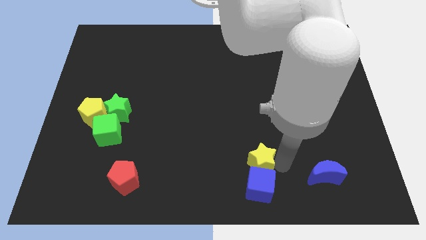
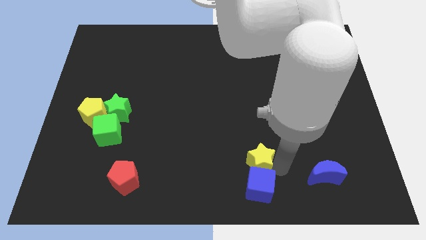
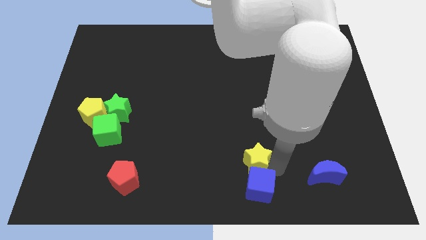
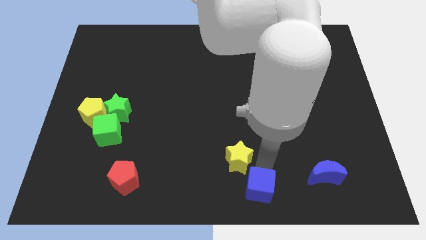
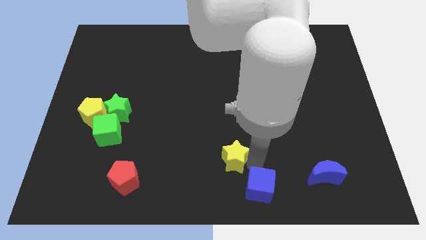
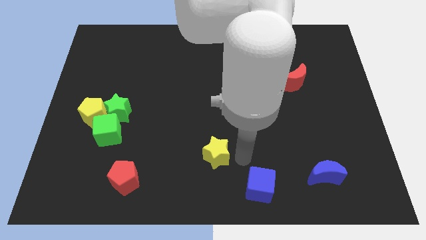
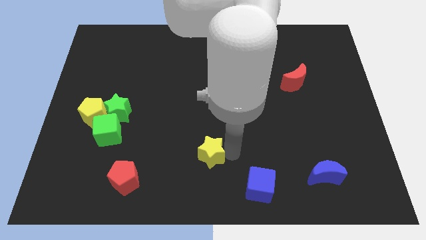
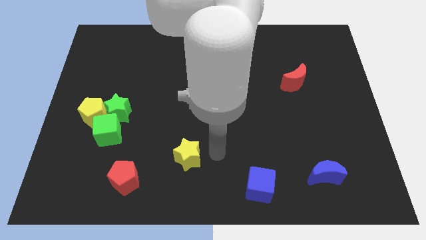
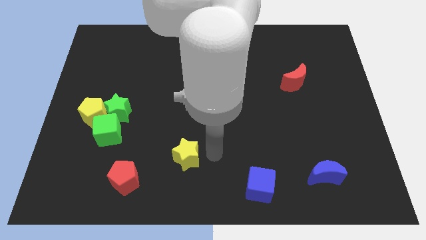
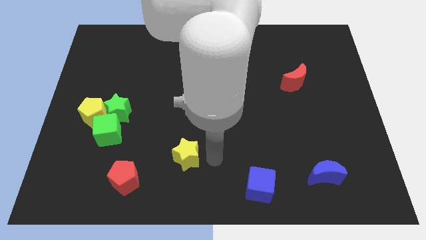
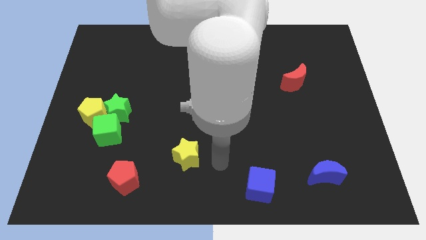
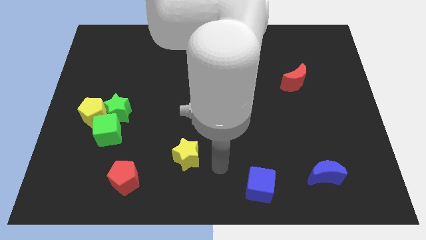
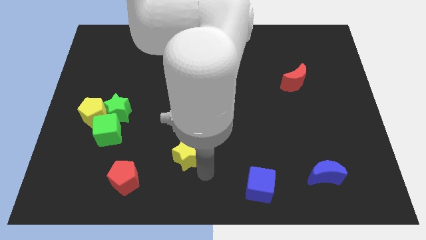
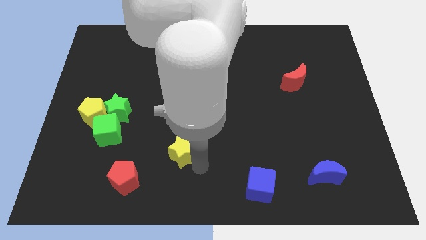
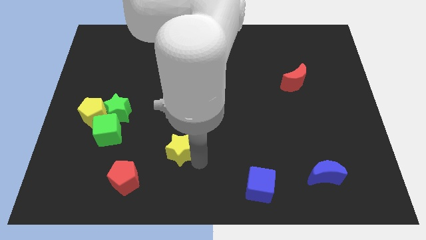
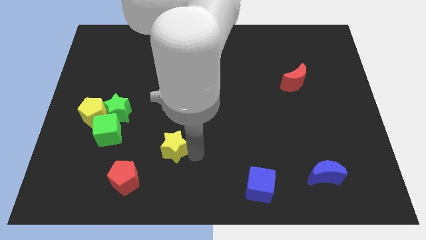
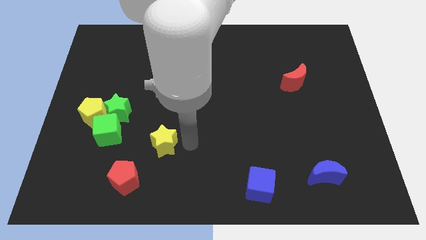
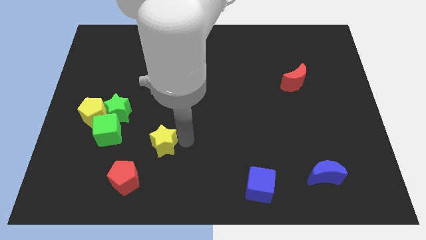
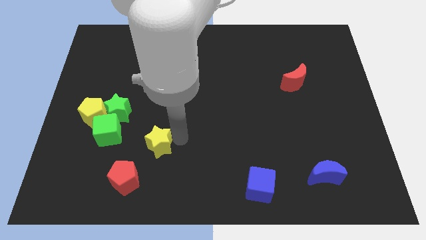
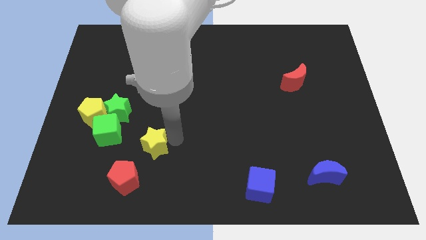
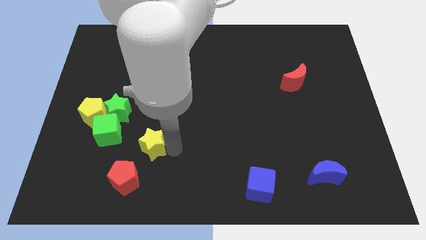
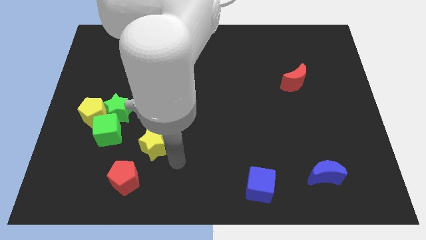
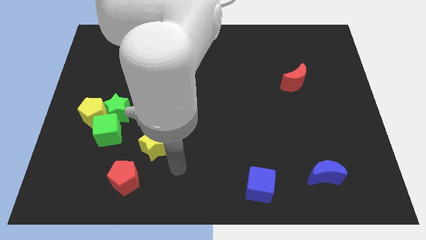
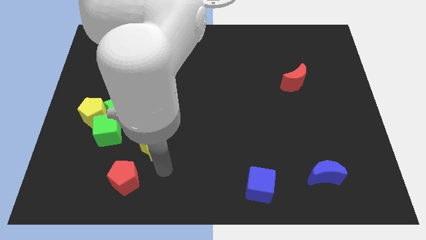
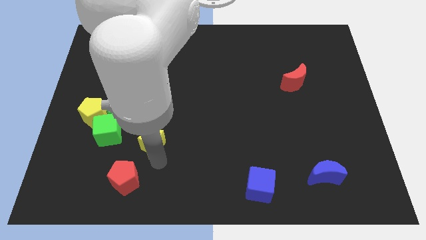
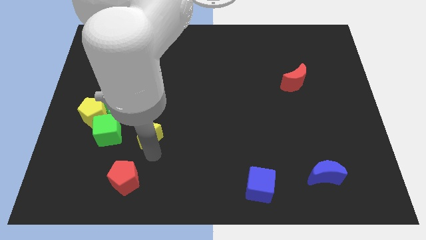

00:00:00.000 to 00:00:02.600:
push the yellow star towards the green star block

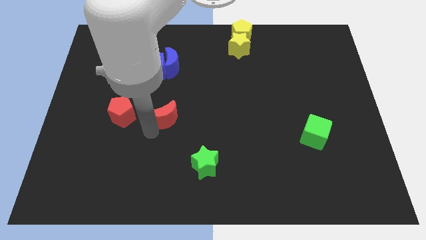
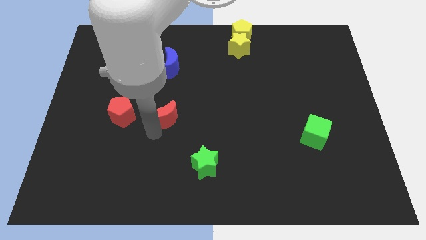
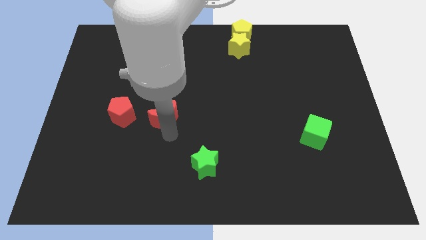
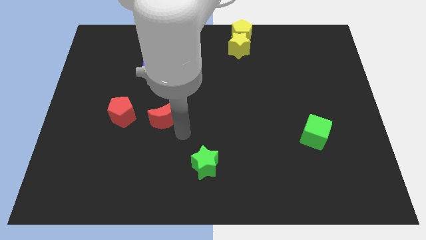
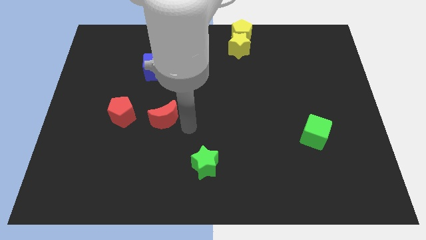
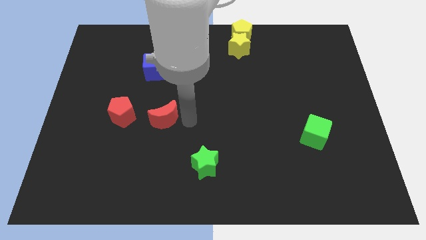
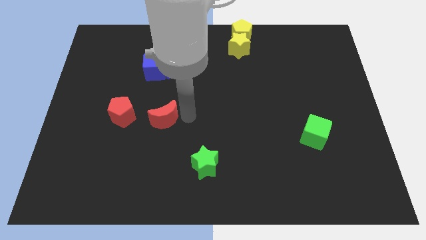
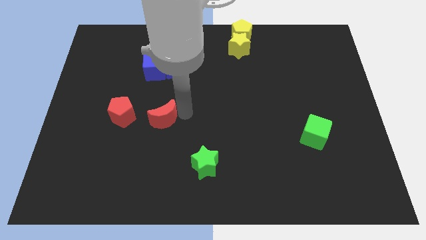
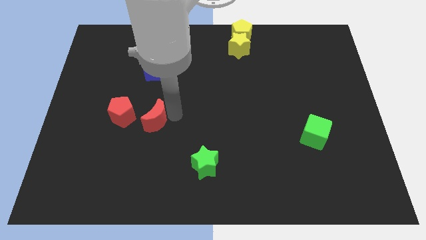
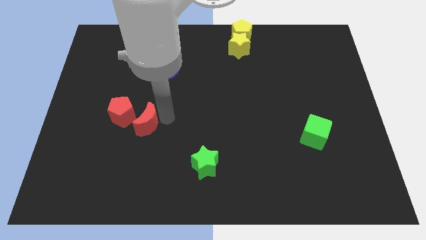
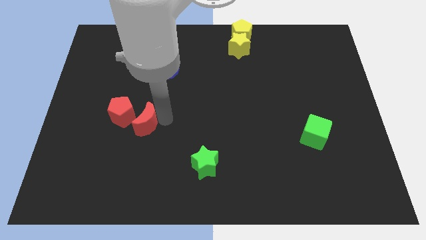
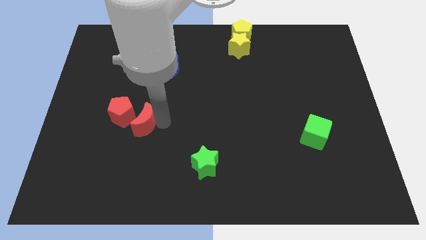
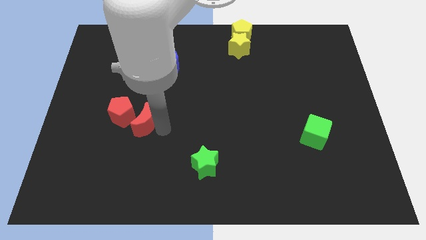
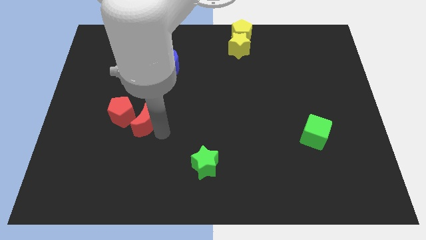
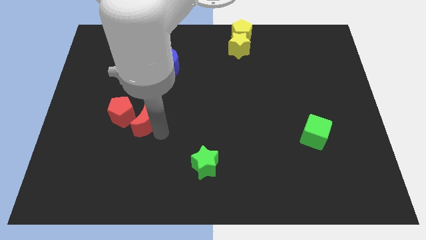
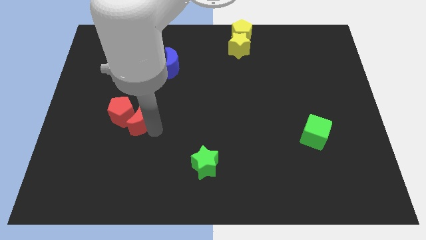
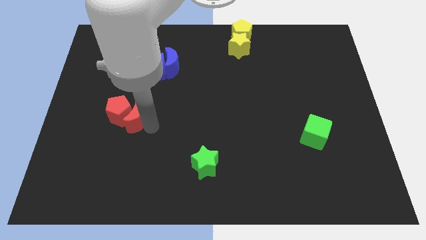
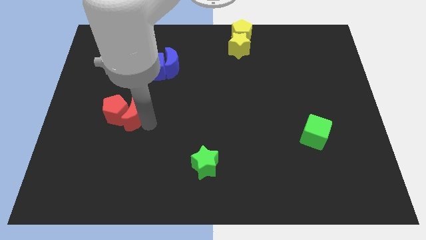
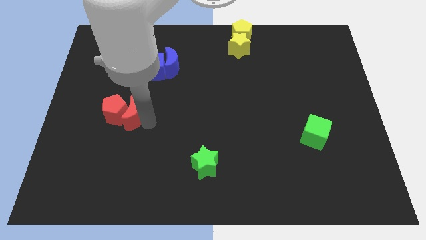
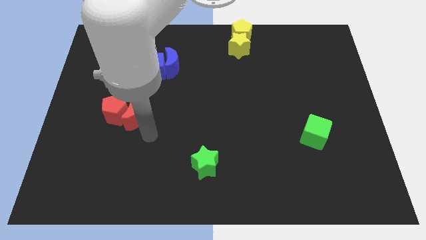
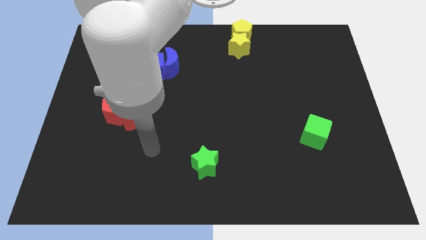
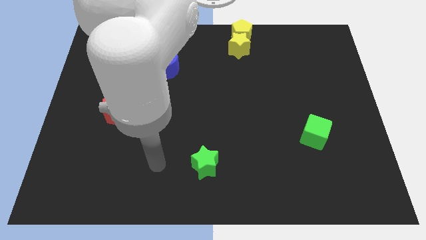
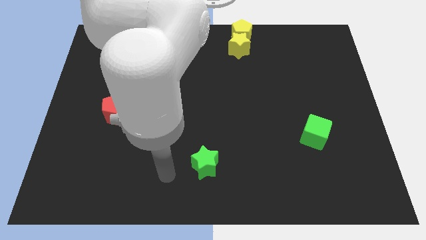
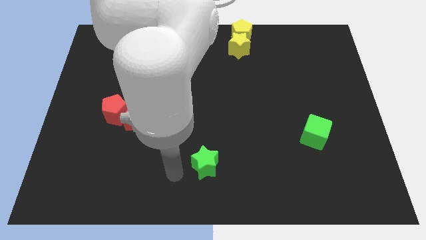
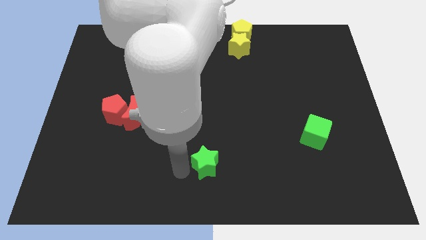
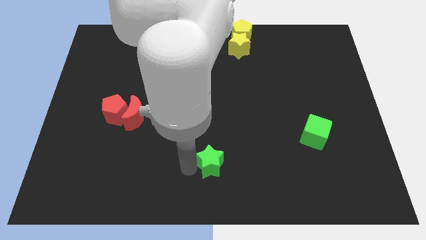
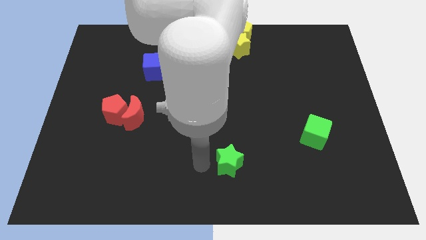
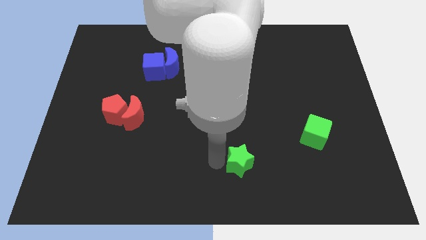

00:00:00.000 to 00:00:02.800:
put the two red blocks together

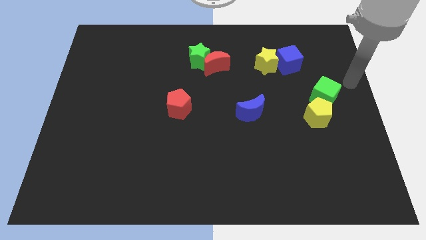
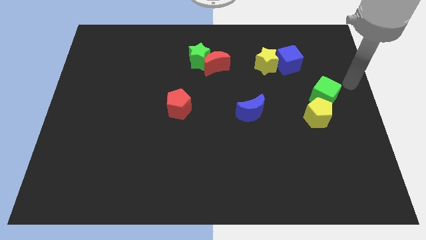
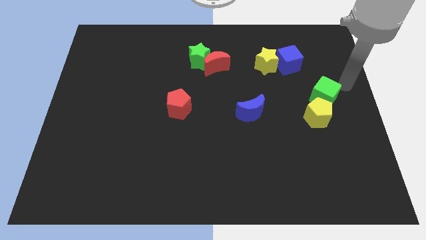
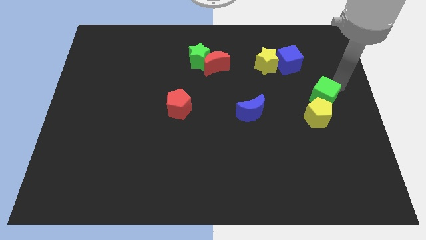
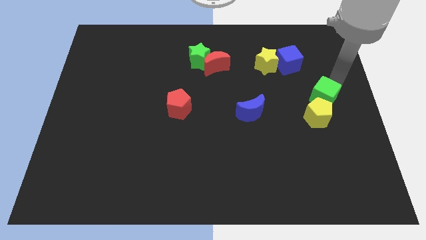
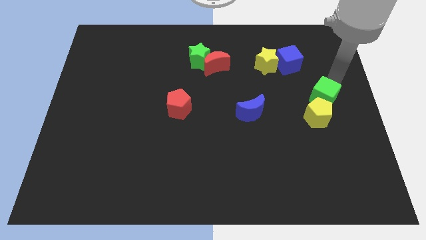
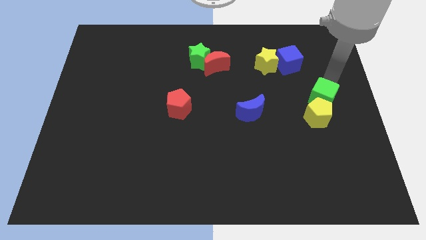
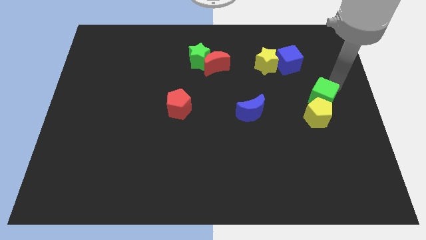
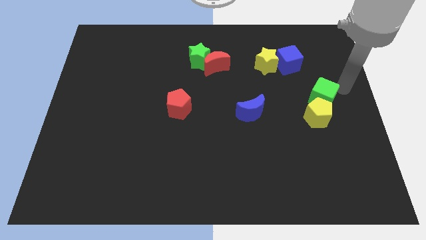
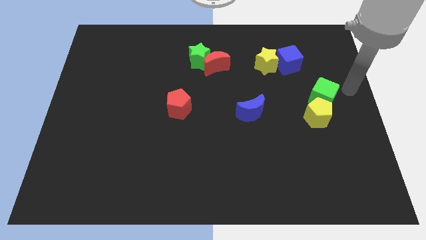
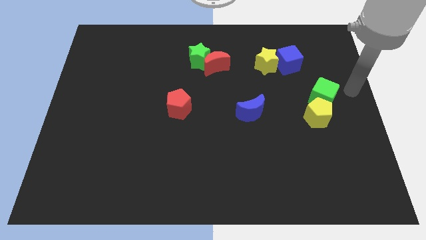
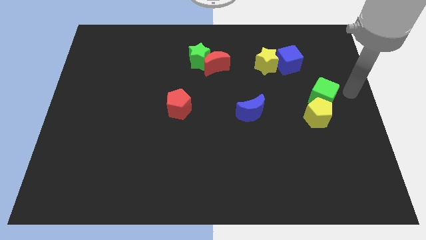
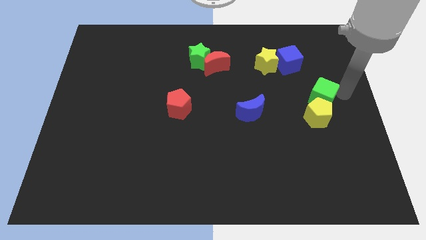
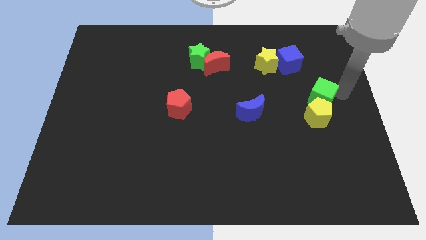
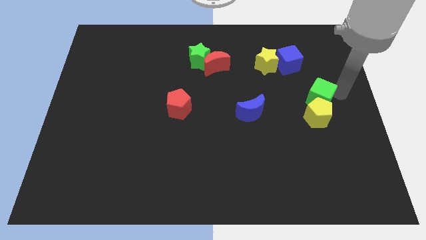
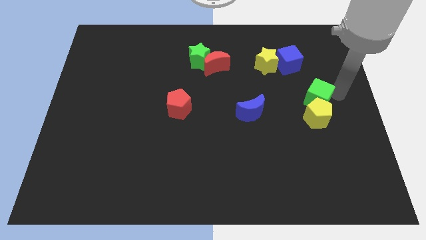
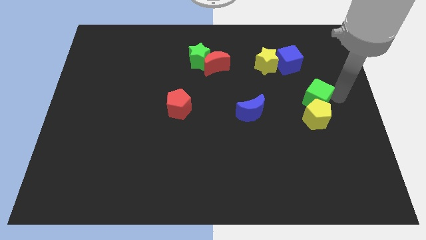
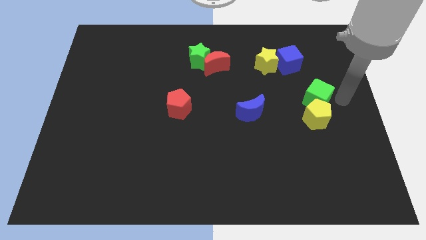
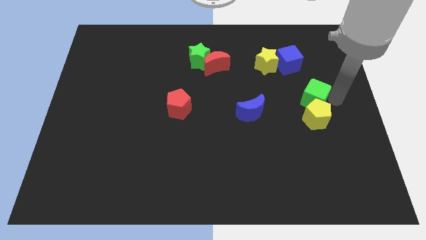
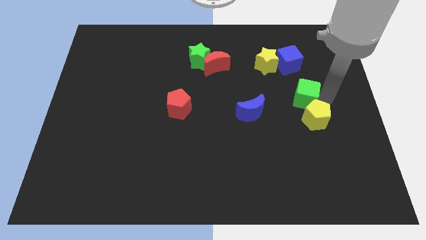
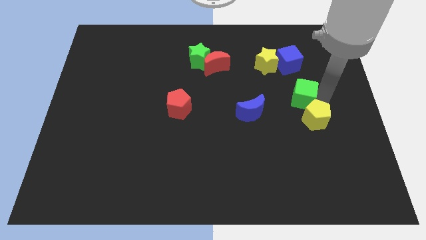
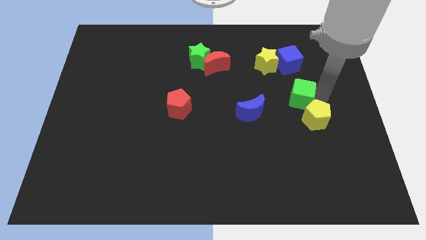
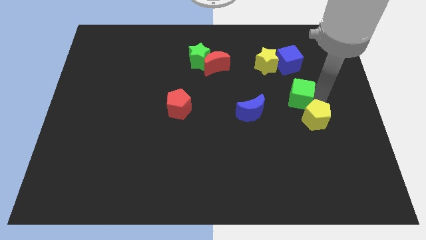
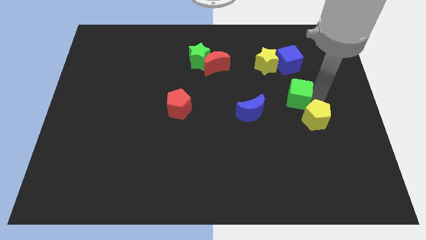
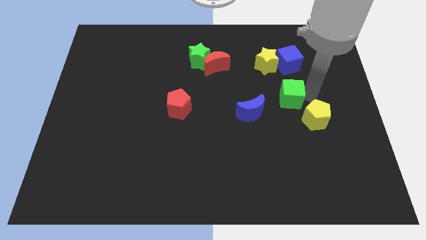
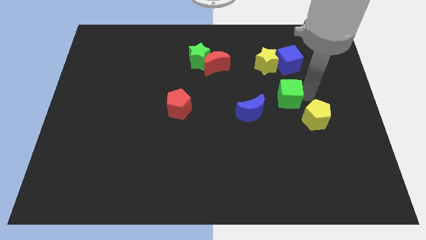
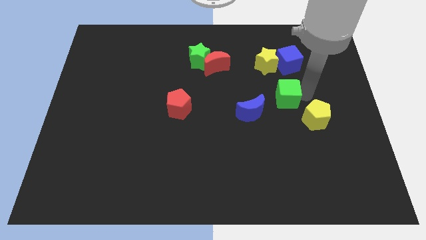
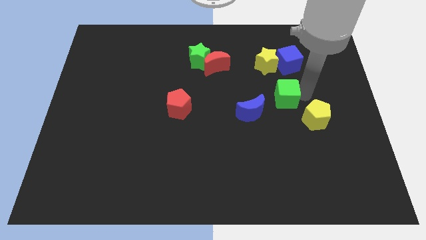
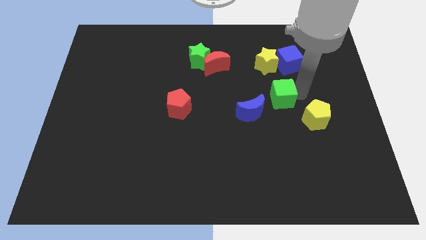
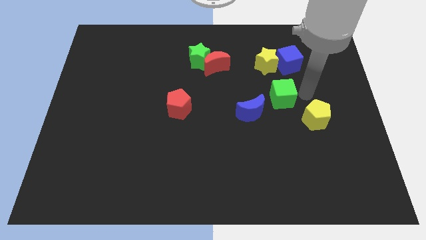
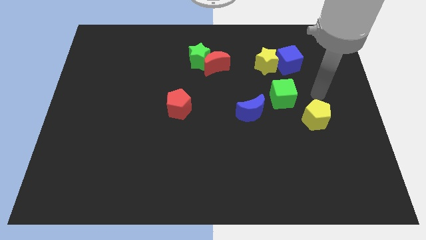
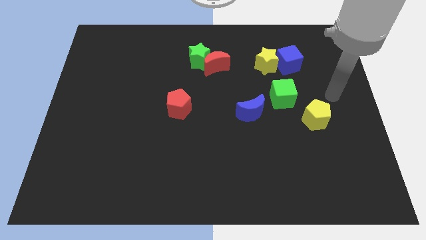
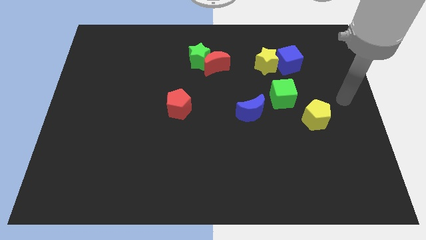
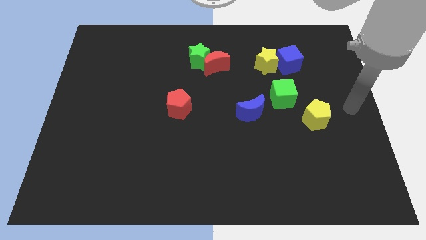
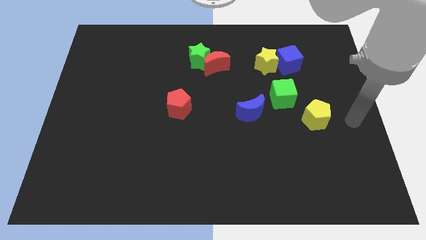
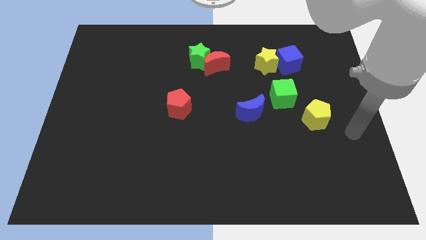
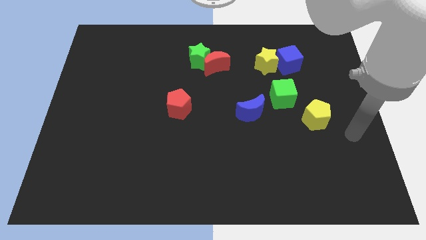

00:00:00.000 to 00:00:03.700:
place green cube below blue cube
